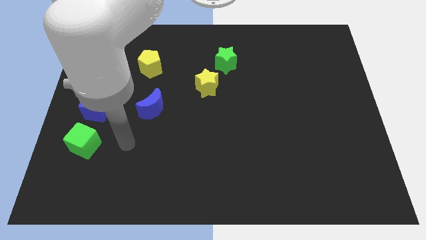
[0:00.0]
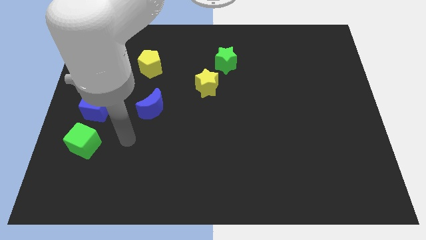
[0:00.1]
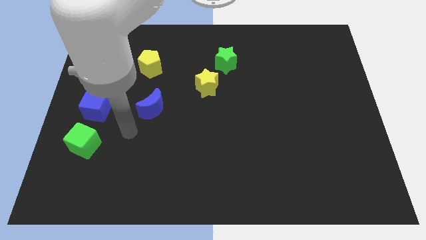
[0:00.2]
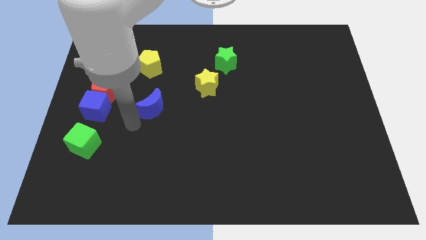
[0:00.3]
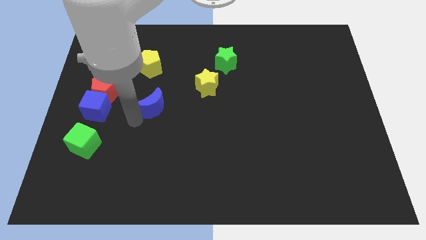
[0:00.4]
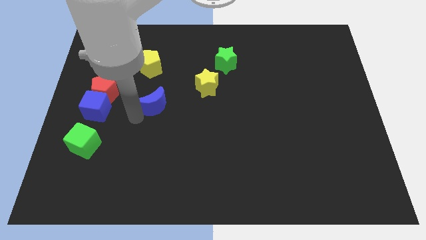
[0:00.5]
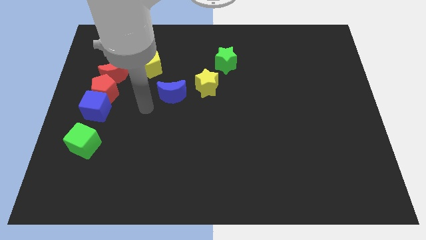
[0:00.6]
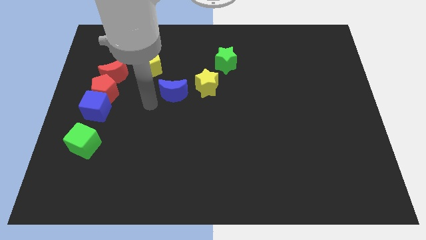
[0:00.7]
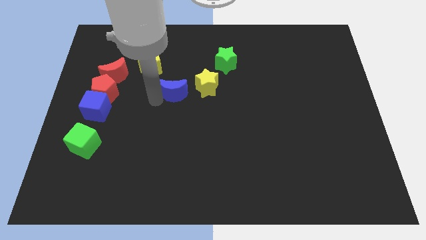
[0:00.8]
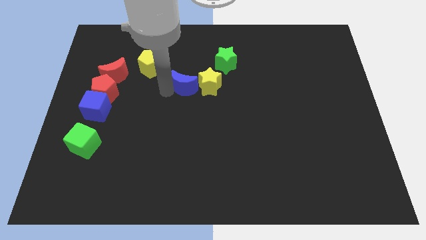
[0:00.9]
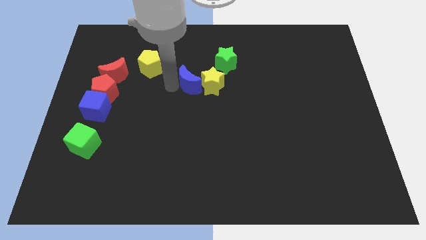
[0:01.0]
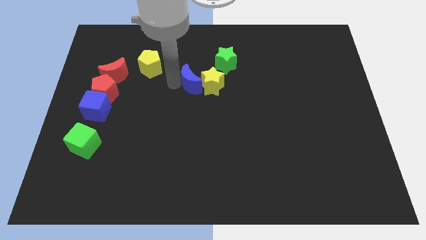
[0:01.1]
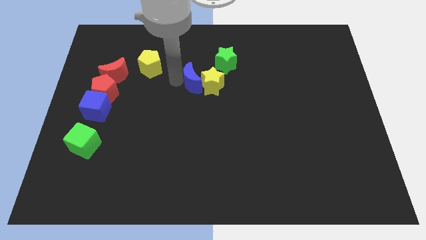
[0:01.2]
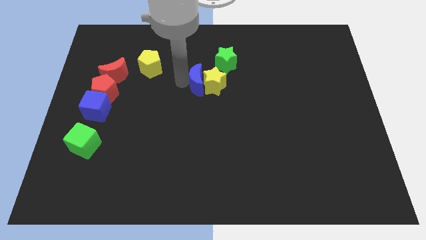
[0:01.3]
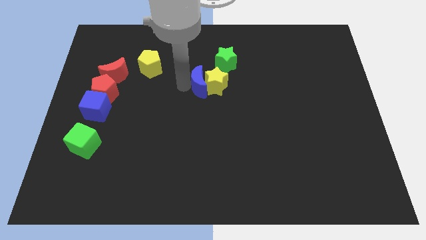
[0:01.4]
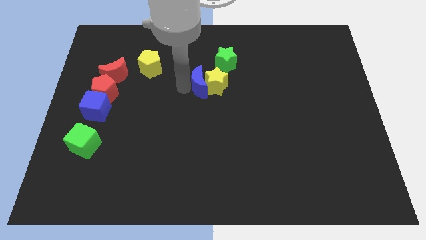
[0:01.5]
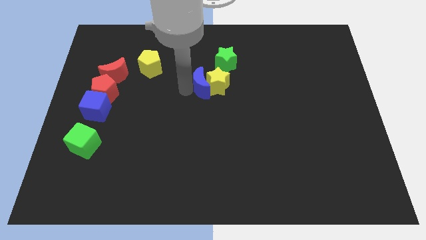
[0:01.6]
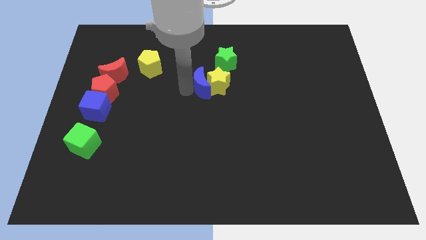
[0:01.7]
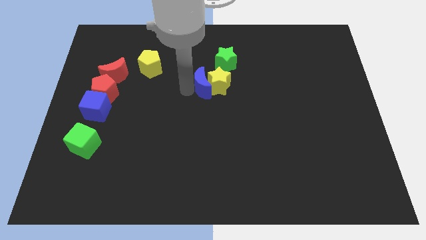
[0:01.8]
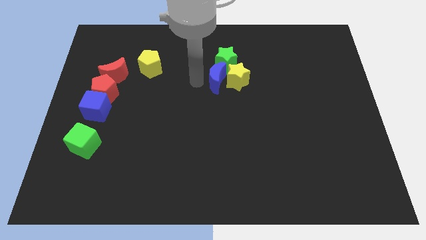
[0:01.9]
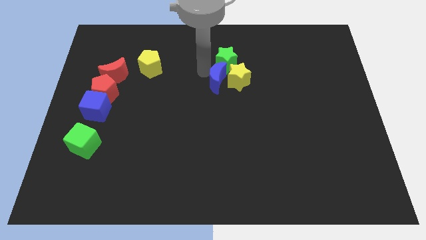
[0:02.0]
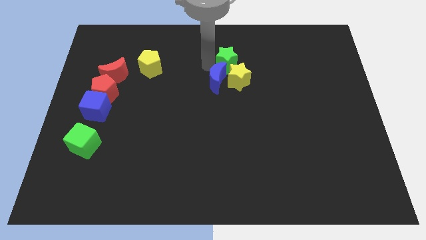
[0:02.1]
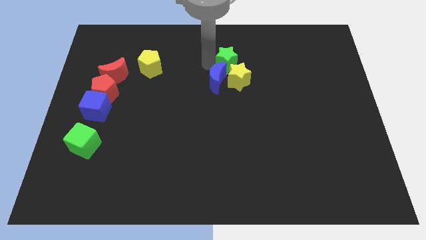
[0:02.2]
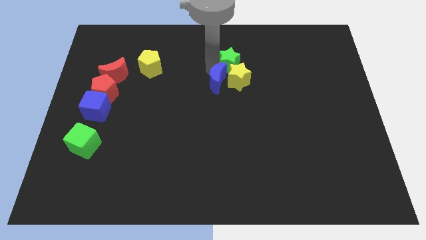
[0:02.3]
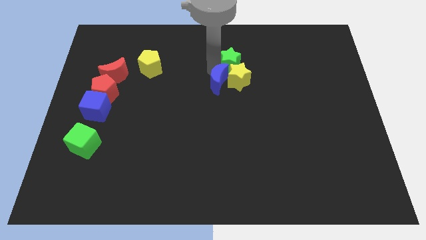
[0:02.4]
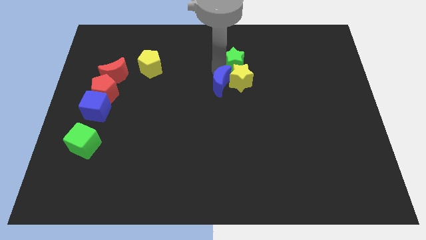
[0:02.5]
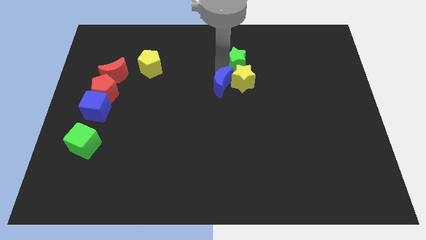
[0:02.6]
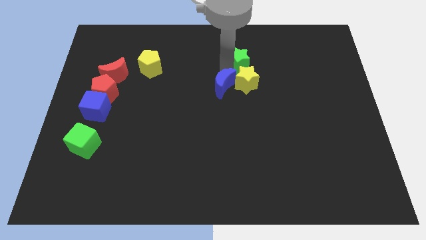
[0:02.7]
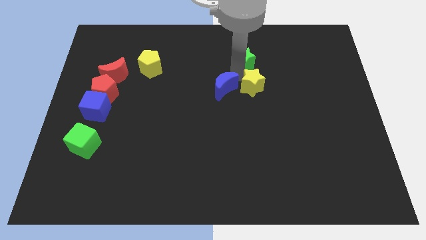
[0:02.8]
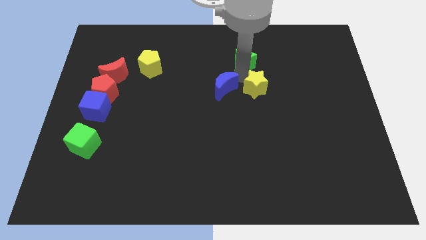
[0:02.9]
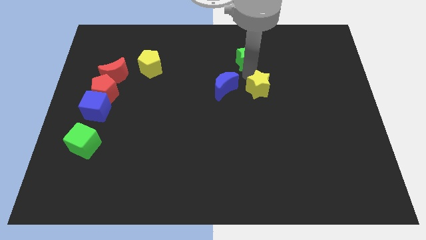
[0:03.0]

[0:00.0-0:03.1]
push the stars and blue moon towards the right side of the board

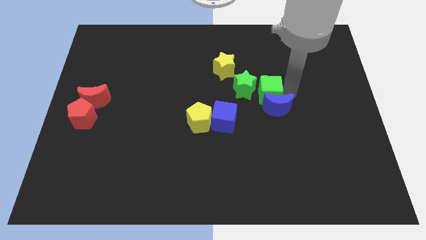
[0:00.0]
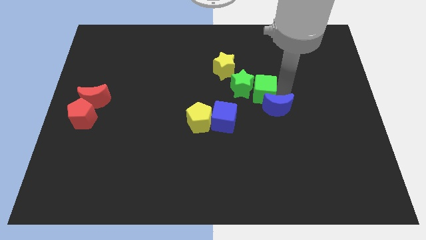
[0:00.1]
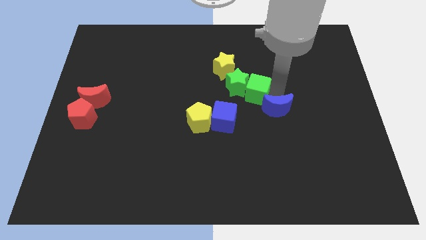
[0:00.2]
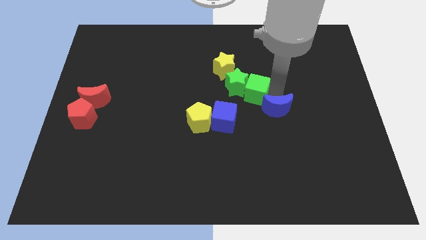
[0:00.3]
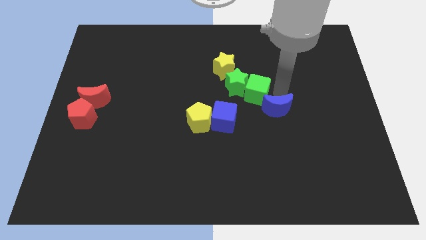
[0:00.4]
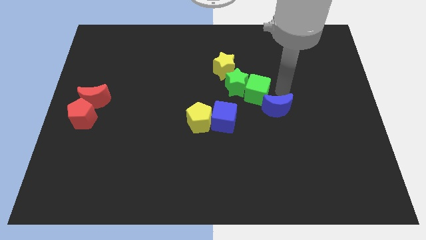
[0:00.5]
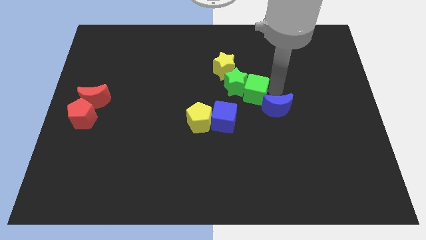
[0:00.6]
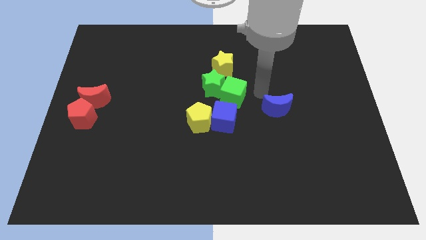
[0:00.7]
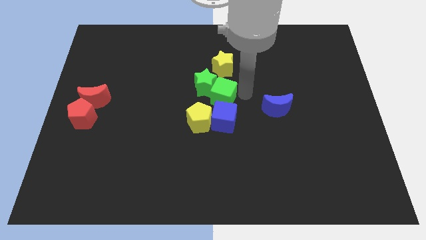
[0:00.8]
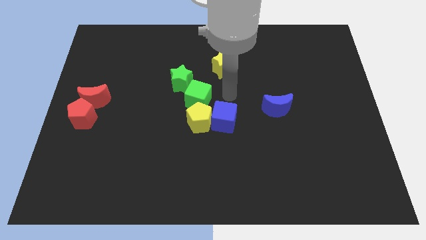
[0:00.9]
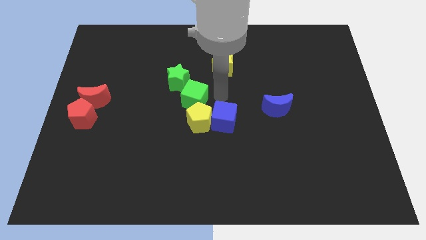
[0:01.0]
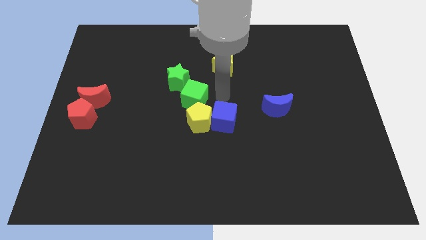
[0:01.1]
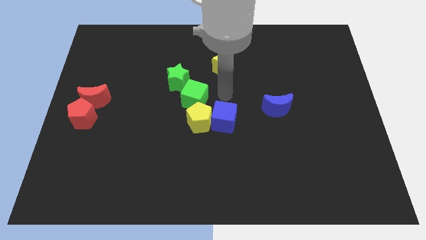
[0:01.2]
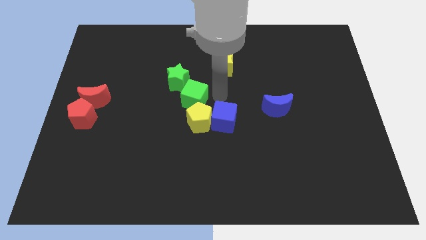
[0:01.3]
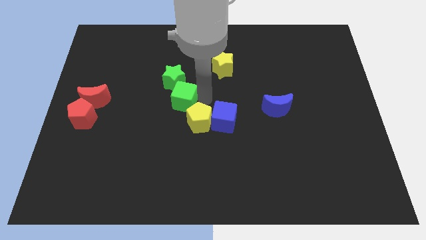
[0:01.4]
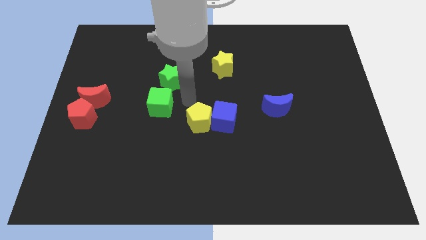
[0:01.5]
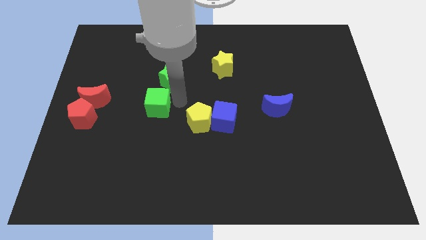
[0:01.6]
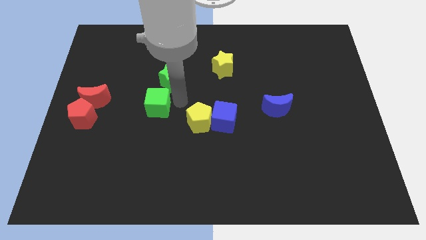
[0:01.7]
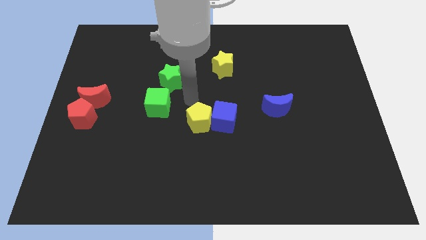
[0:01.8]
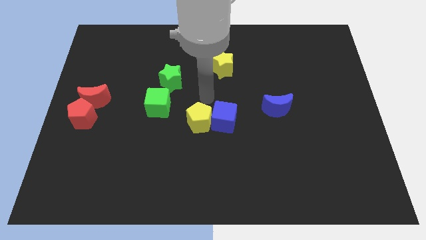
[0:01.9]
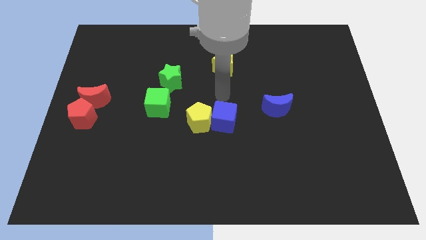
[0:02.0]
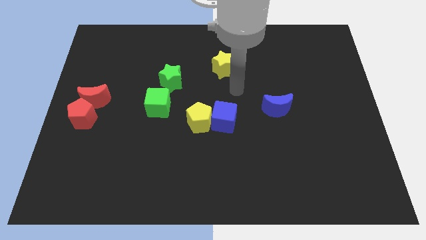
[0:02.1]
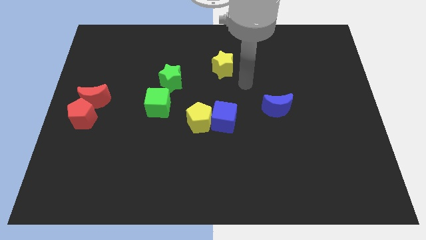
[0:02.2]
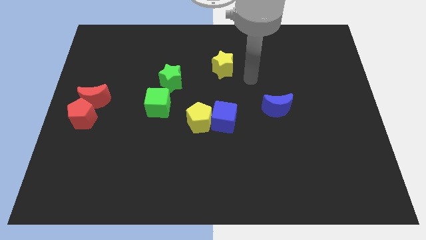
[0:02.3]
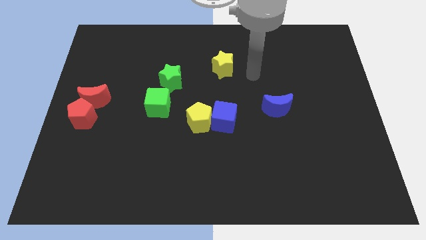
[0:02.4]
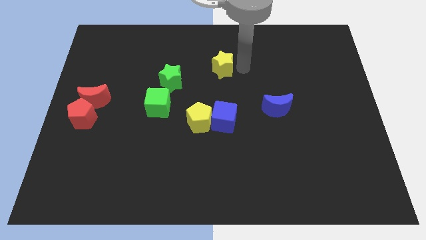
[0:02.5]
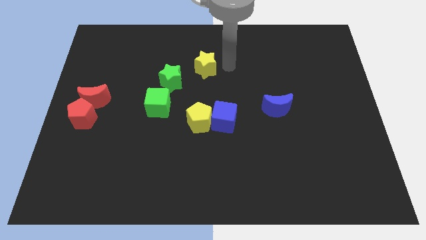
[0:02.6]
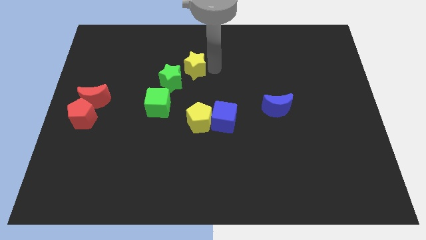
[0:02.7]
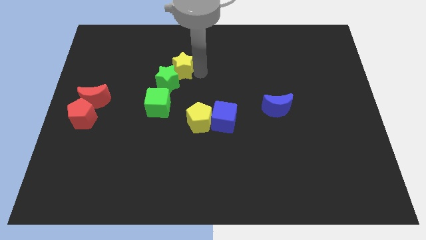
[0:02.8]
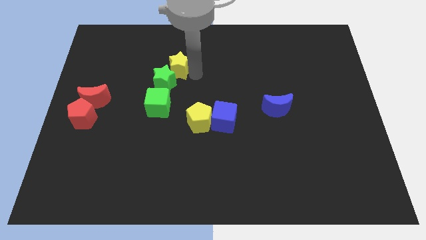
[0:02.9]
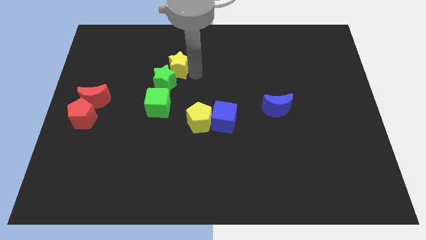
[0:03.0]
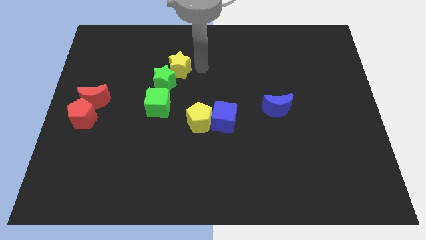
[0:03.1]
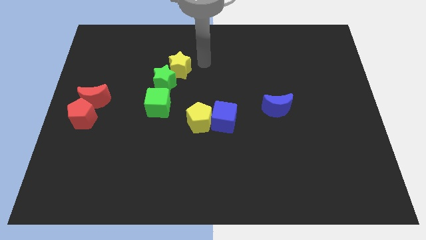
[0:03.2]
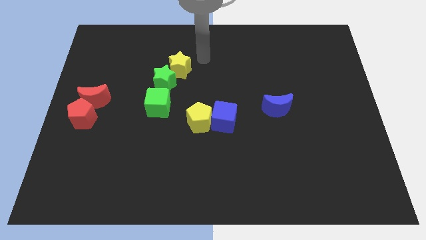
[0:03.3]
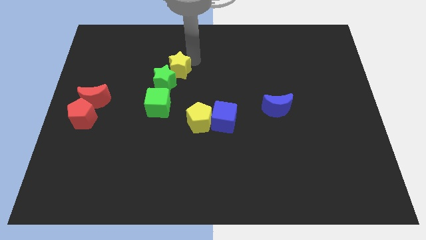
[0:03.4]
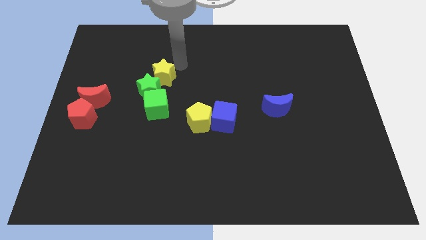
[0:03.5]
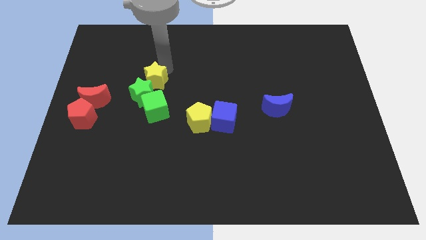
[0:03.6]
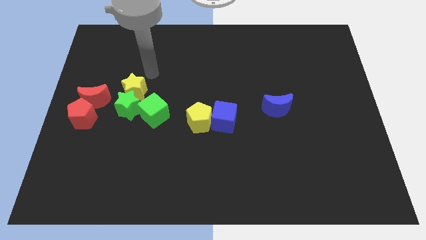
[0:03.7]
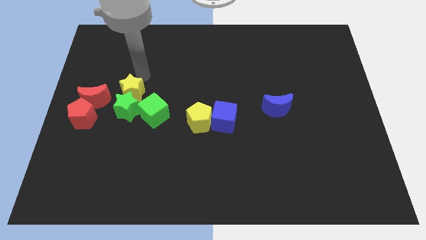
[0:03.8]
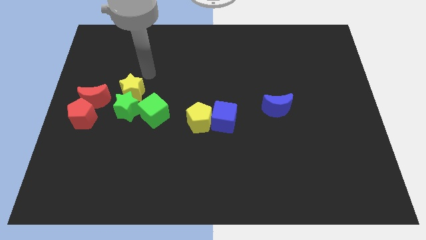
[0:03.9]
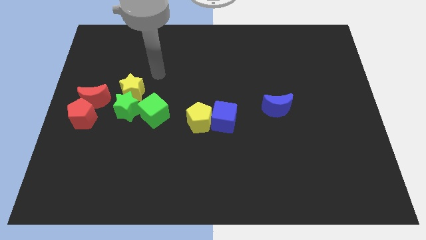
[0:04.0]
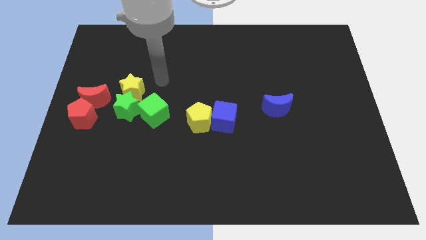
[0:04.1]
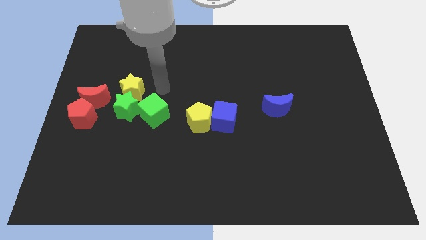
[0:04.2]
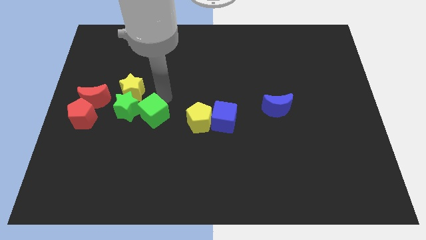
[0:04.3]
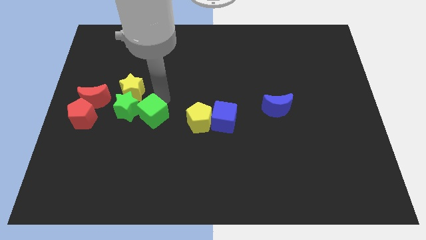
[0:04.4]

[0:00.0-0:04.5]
push the green blocks and the yellow star to the right of the red blocks

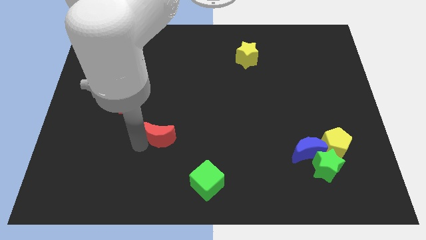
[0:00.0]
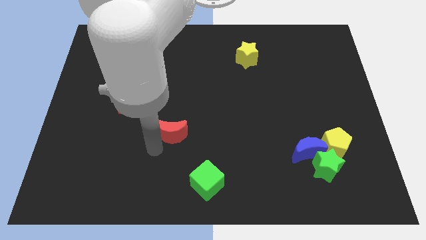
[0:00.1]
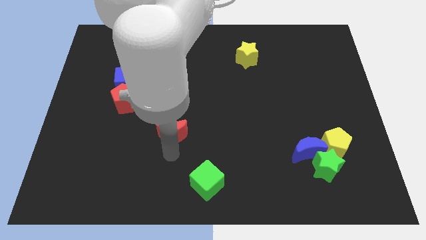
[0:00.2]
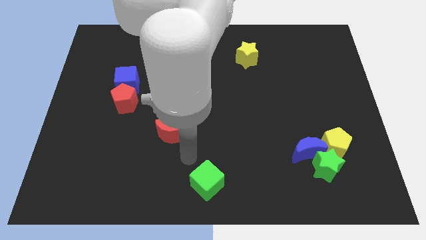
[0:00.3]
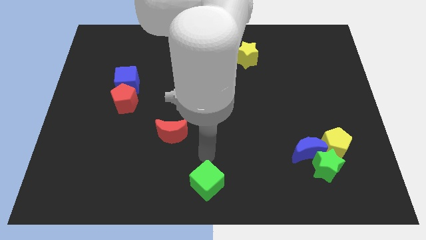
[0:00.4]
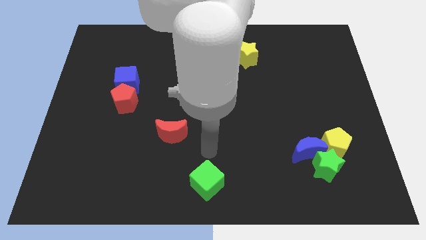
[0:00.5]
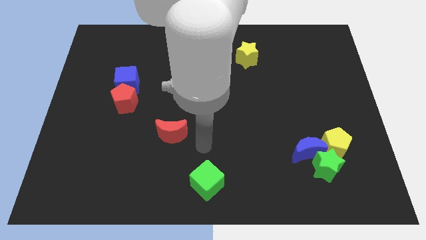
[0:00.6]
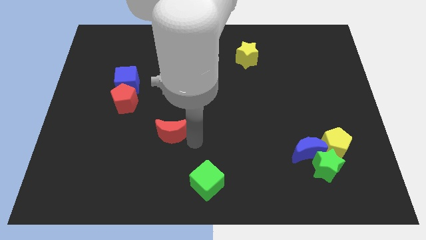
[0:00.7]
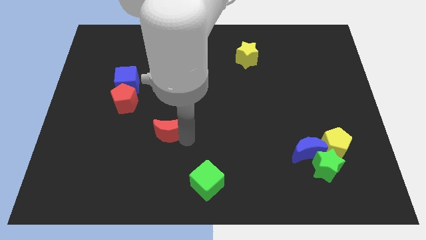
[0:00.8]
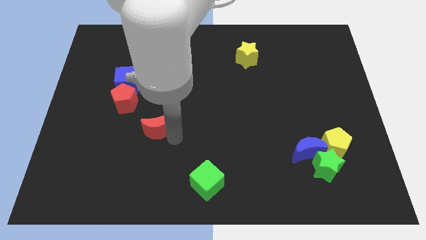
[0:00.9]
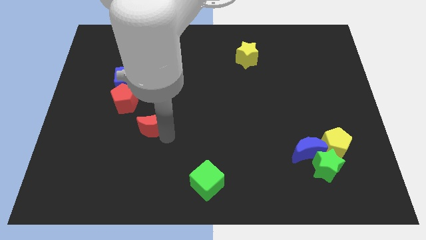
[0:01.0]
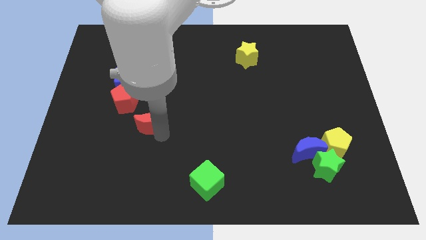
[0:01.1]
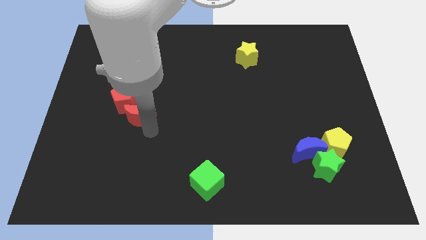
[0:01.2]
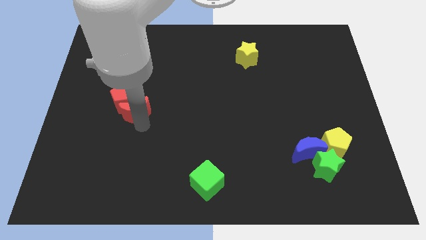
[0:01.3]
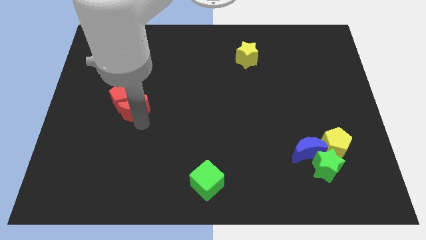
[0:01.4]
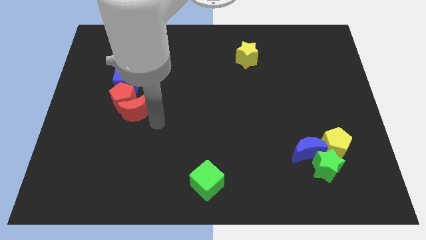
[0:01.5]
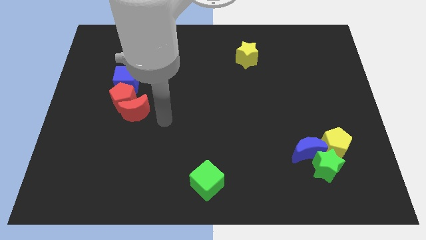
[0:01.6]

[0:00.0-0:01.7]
put the red blocks together
